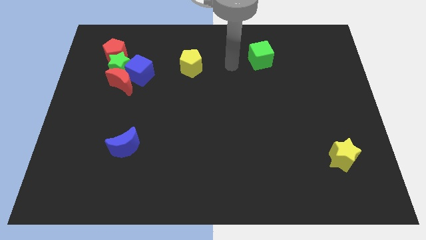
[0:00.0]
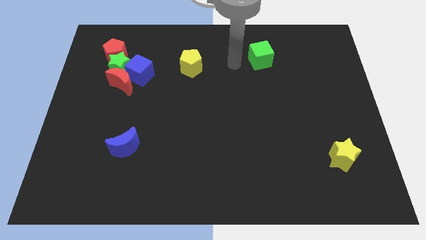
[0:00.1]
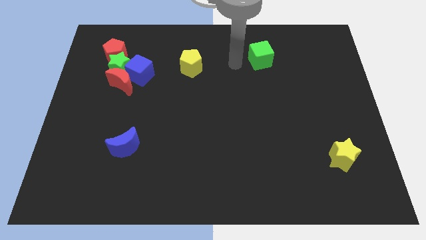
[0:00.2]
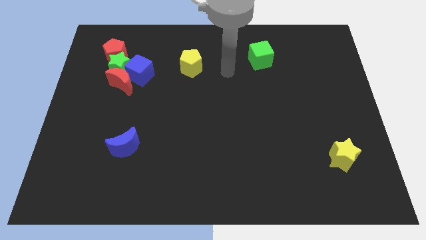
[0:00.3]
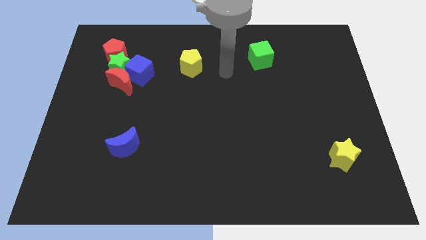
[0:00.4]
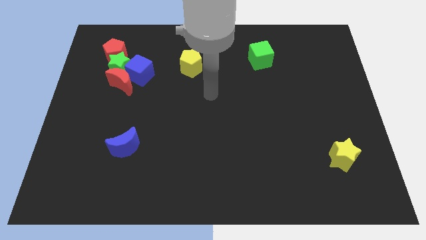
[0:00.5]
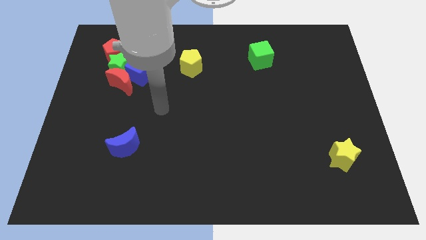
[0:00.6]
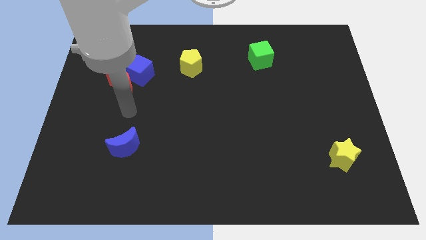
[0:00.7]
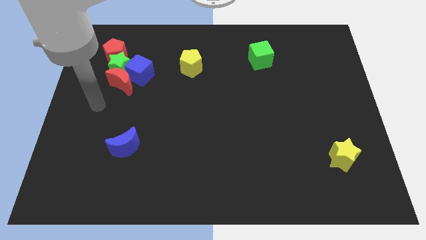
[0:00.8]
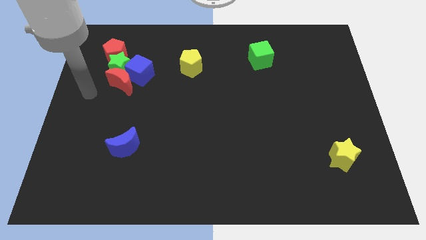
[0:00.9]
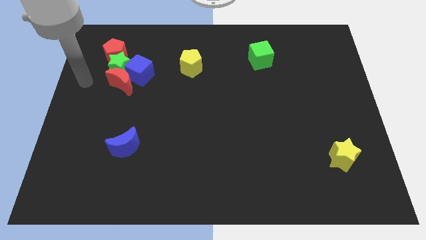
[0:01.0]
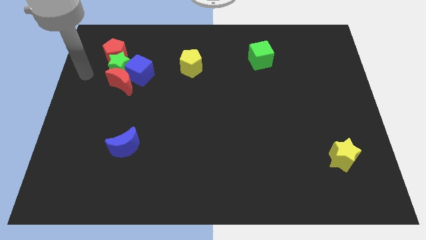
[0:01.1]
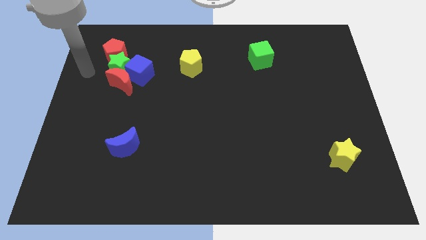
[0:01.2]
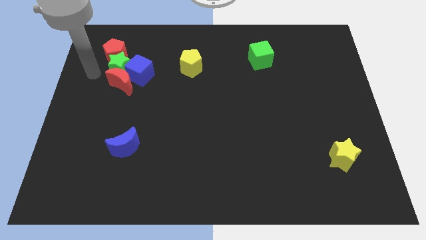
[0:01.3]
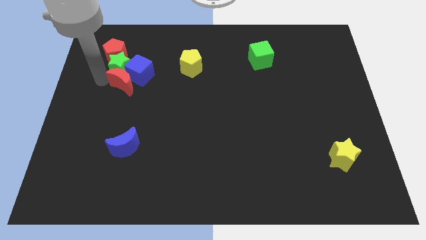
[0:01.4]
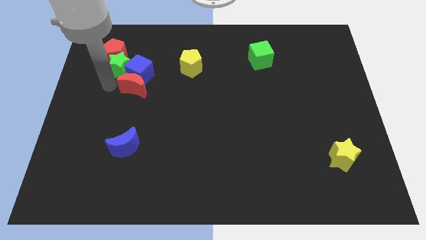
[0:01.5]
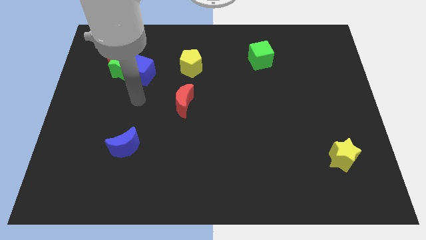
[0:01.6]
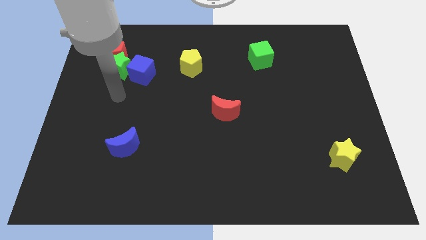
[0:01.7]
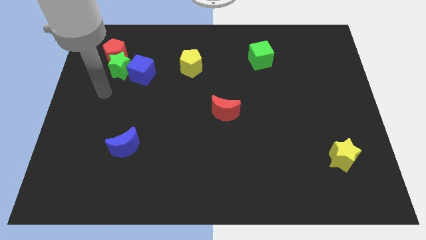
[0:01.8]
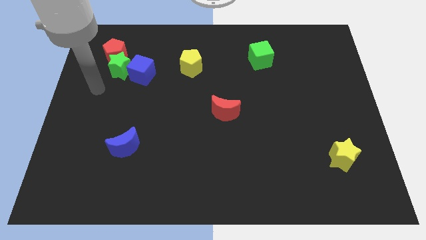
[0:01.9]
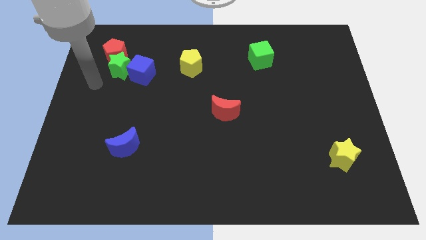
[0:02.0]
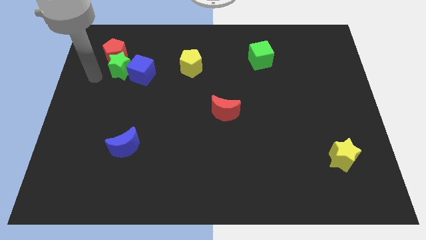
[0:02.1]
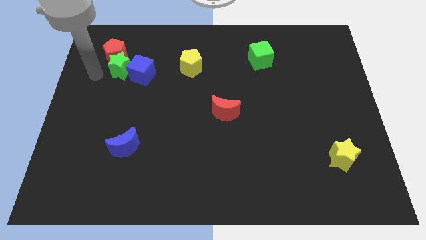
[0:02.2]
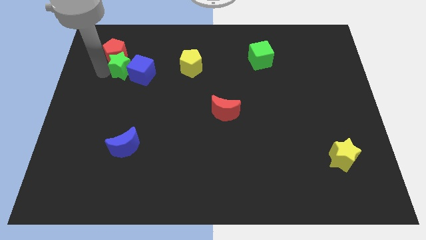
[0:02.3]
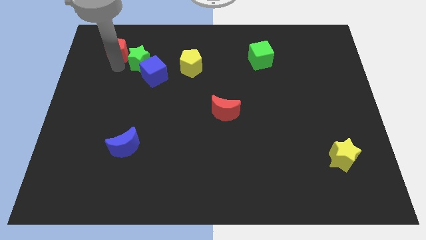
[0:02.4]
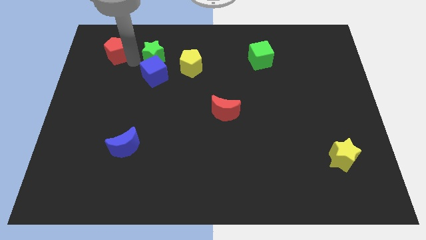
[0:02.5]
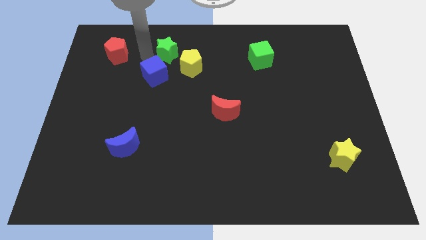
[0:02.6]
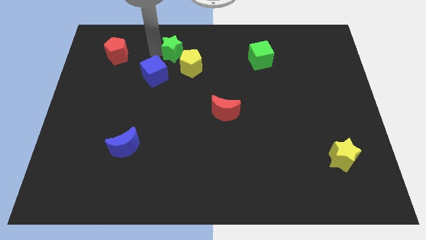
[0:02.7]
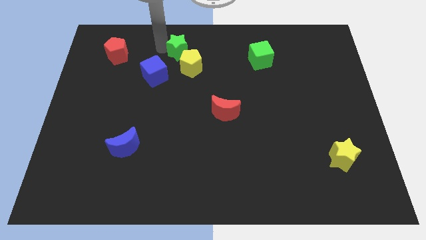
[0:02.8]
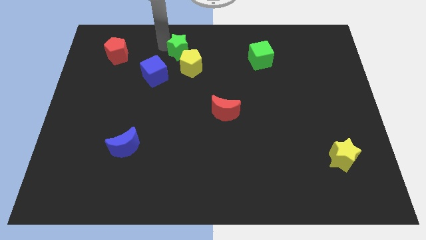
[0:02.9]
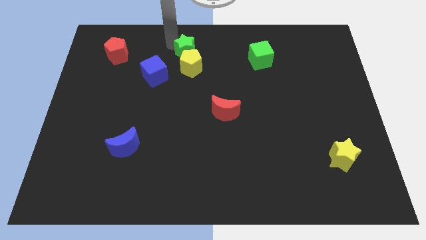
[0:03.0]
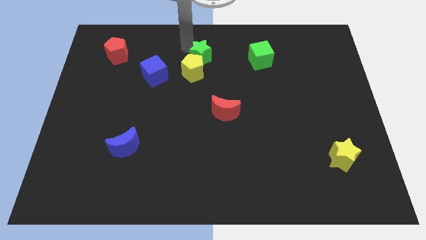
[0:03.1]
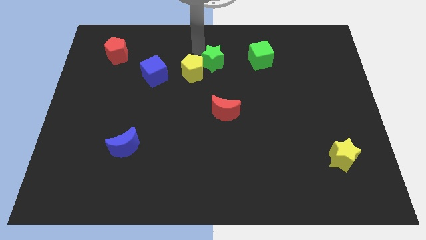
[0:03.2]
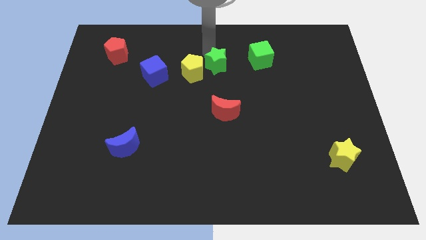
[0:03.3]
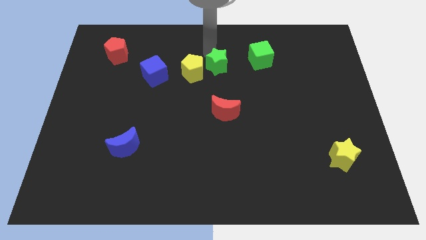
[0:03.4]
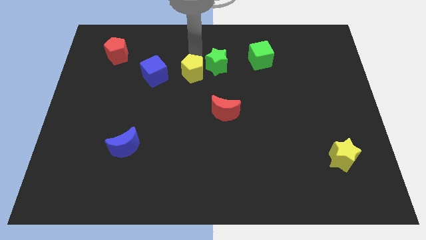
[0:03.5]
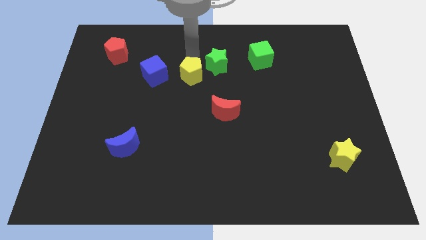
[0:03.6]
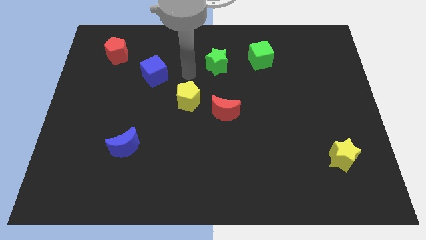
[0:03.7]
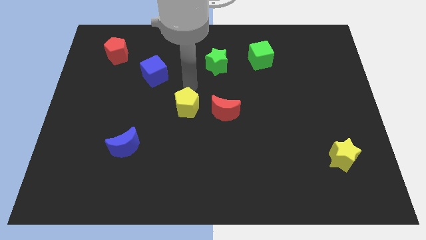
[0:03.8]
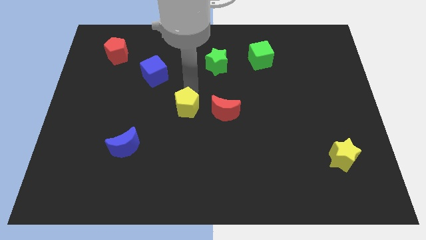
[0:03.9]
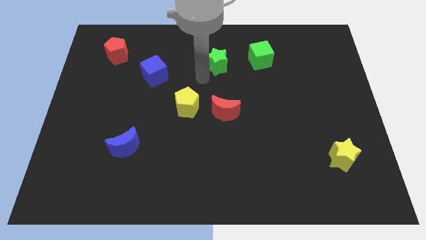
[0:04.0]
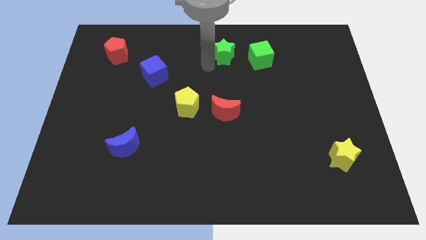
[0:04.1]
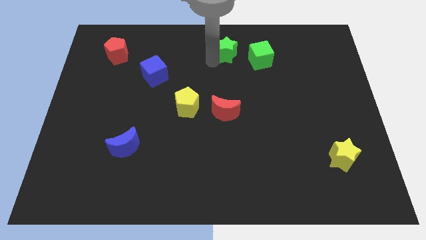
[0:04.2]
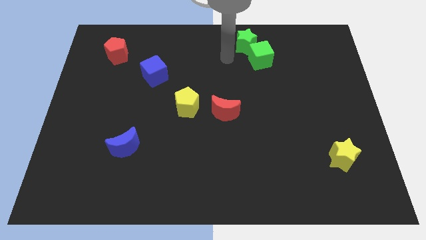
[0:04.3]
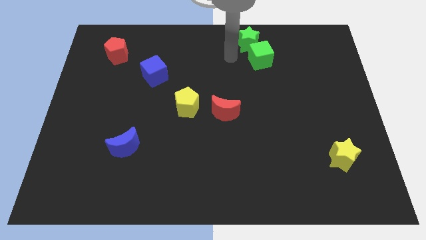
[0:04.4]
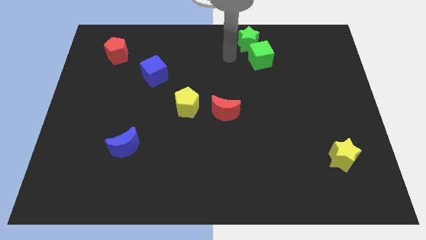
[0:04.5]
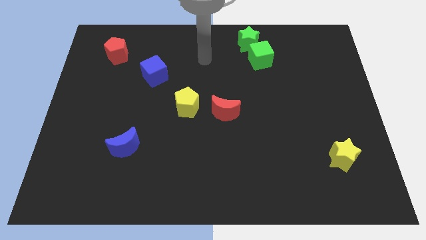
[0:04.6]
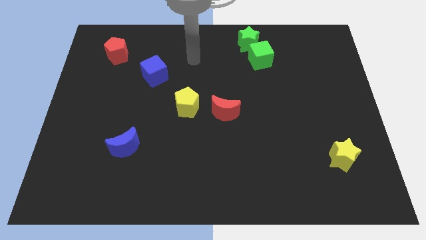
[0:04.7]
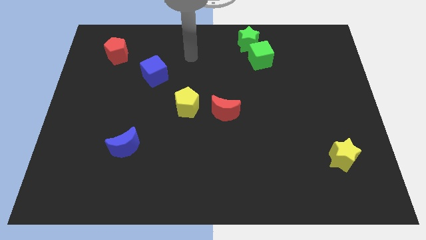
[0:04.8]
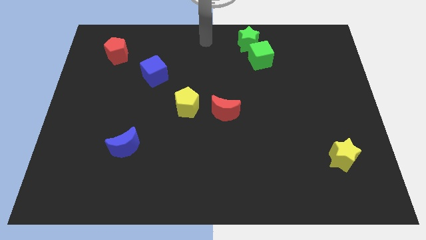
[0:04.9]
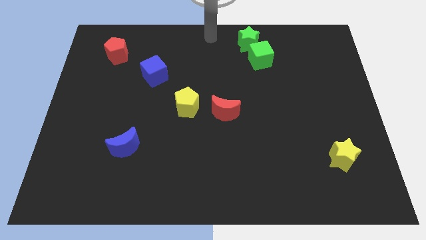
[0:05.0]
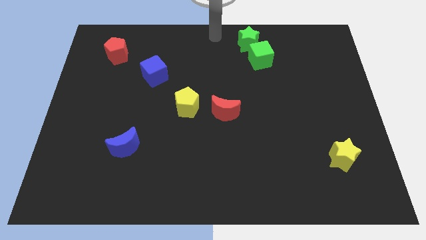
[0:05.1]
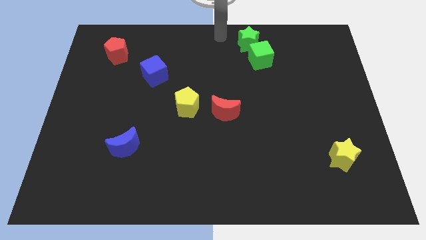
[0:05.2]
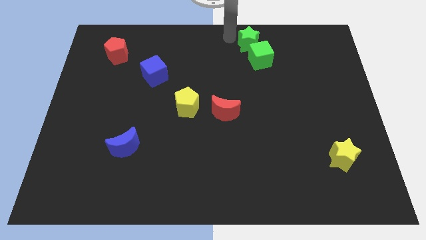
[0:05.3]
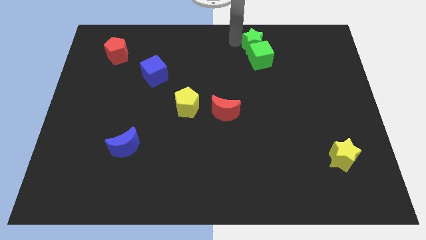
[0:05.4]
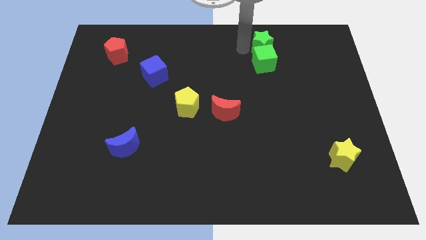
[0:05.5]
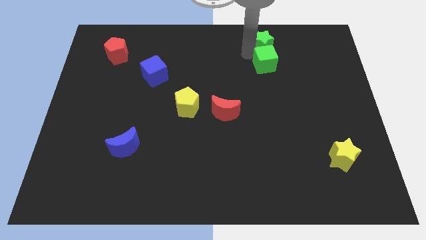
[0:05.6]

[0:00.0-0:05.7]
put the green star towards the green cube

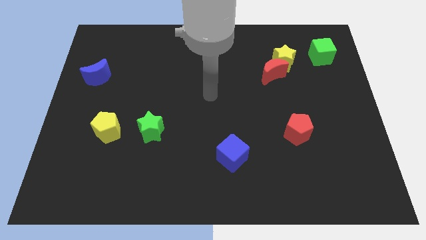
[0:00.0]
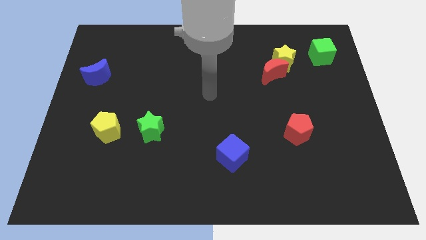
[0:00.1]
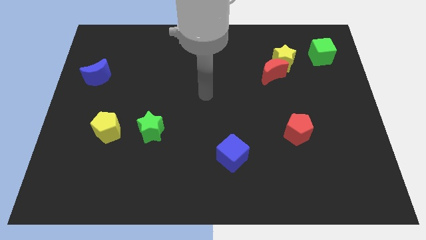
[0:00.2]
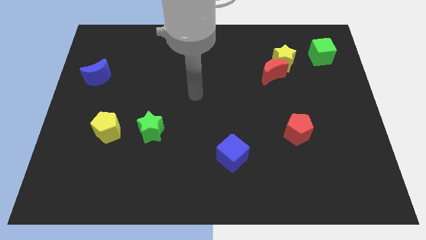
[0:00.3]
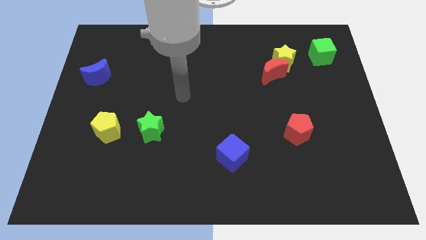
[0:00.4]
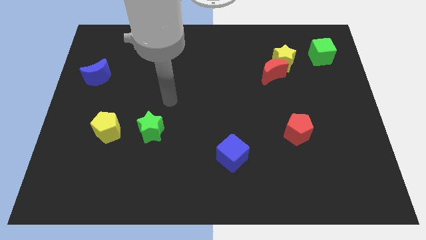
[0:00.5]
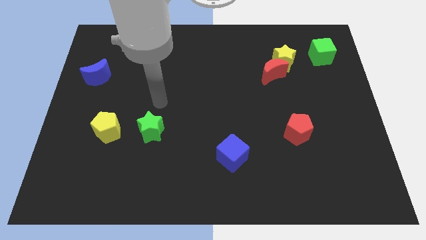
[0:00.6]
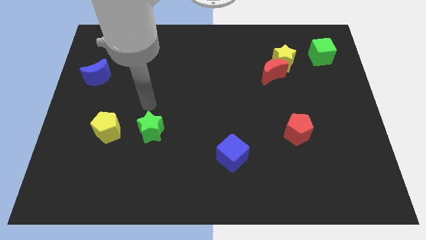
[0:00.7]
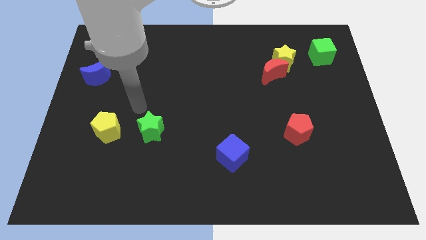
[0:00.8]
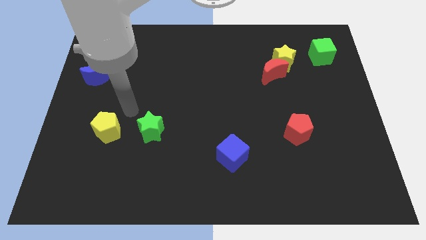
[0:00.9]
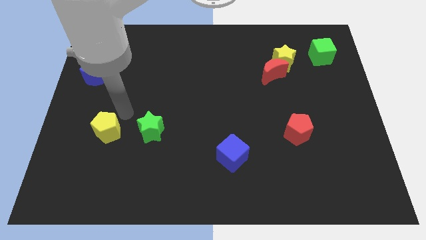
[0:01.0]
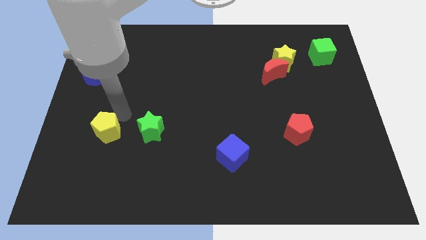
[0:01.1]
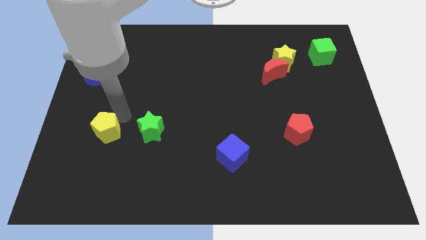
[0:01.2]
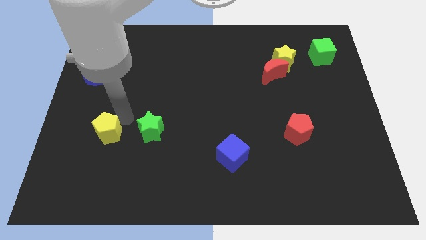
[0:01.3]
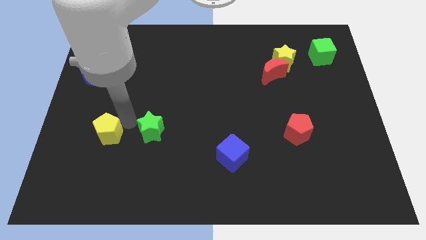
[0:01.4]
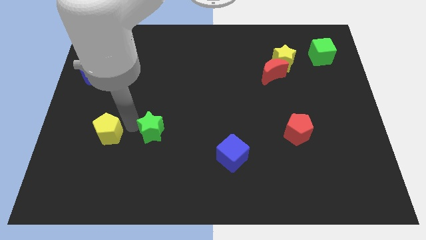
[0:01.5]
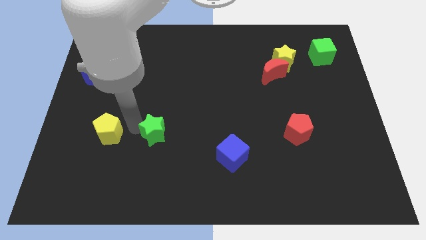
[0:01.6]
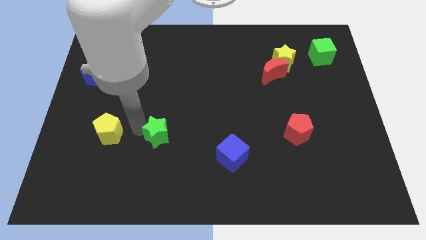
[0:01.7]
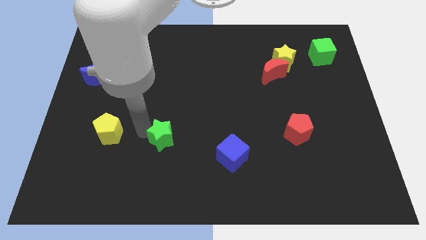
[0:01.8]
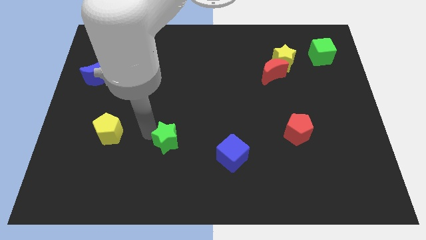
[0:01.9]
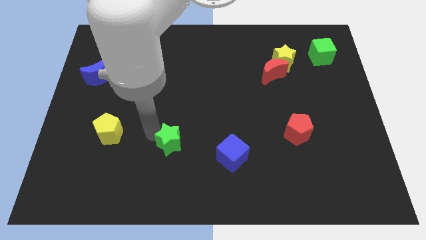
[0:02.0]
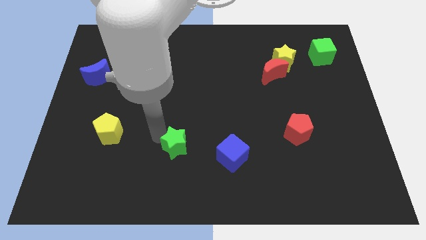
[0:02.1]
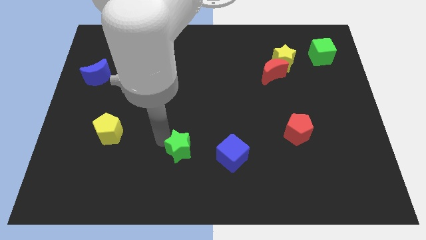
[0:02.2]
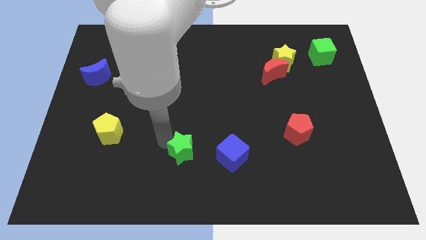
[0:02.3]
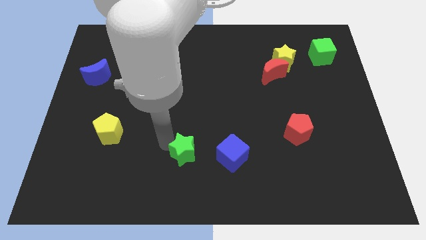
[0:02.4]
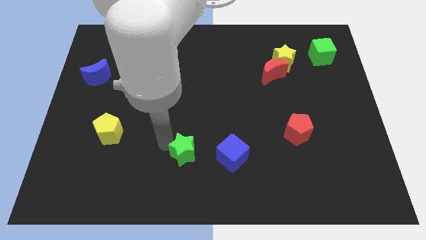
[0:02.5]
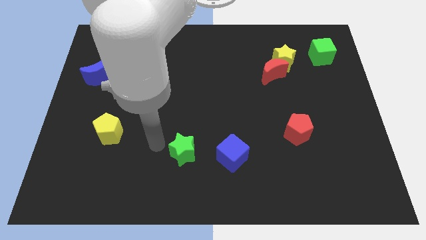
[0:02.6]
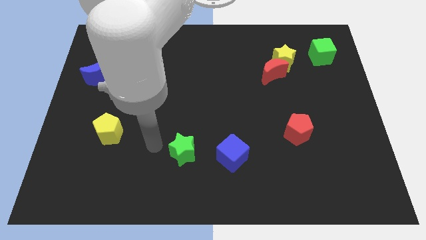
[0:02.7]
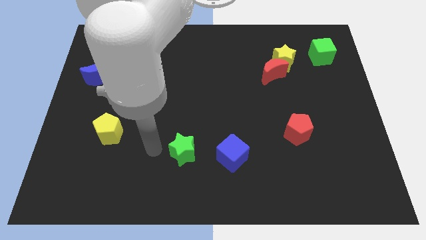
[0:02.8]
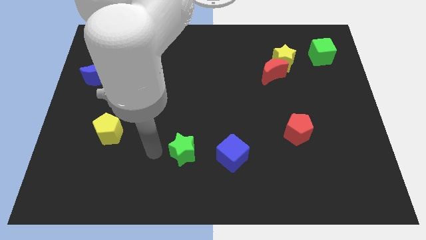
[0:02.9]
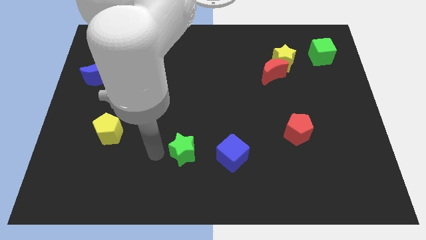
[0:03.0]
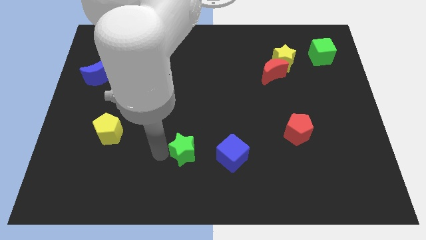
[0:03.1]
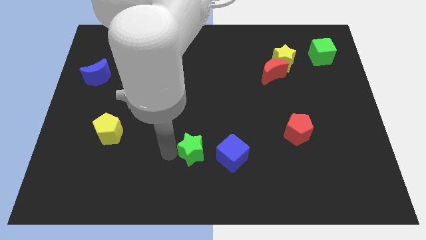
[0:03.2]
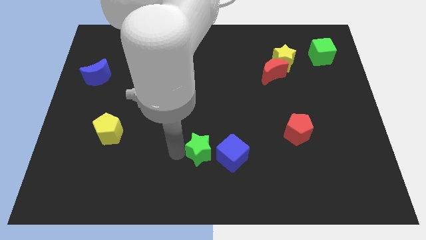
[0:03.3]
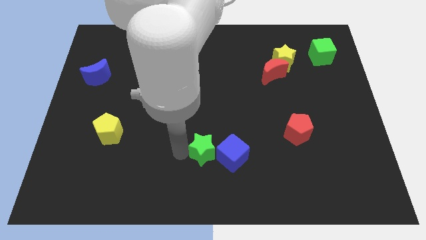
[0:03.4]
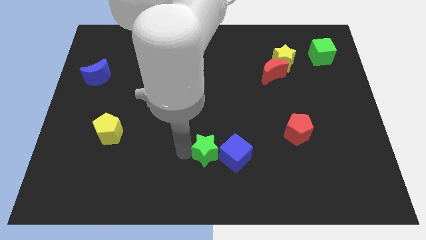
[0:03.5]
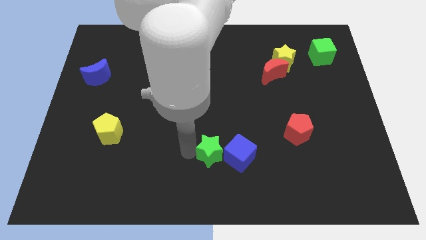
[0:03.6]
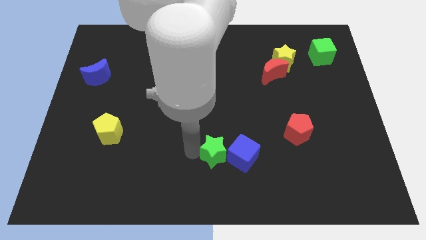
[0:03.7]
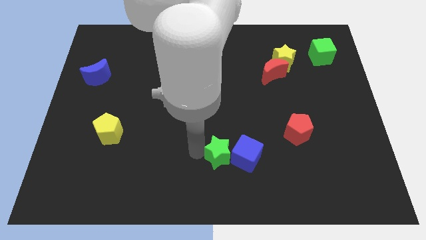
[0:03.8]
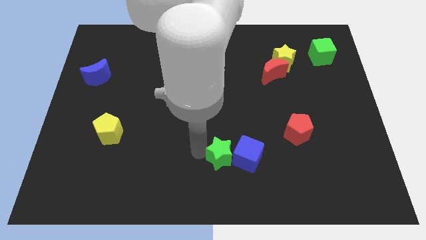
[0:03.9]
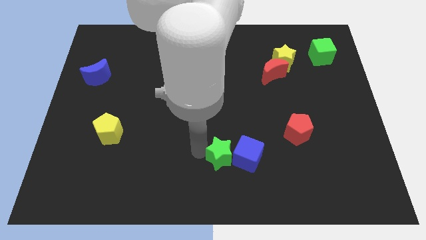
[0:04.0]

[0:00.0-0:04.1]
push the green star to the blue cube
